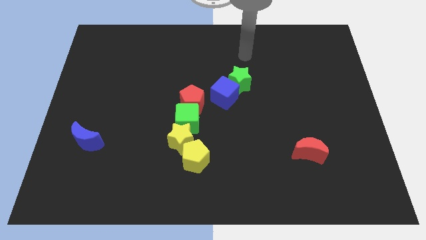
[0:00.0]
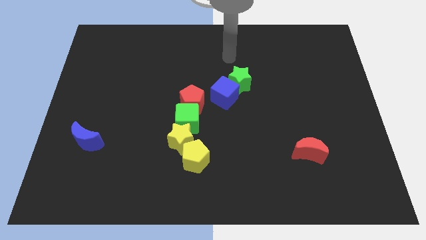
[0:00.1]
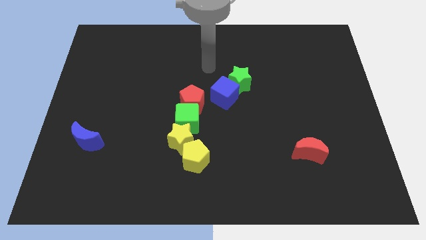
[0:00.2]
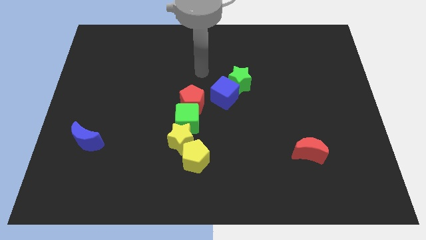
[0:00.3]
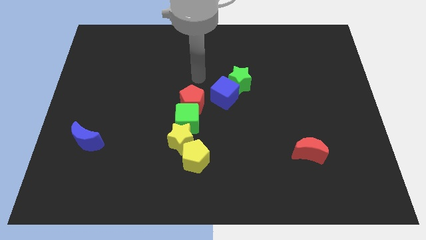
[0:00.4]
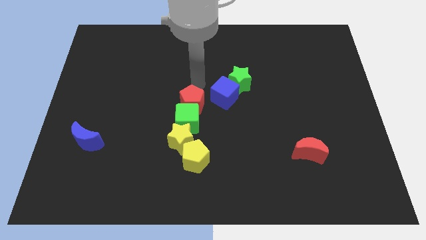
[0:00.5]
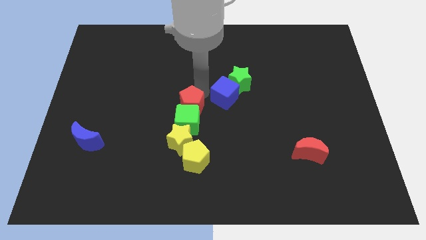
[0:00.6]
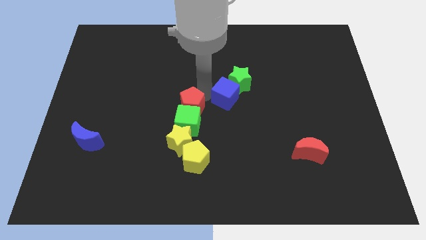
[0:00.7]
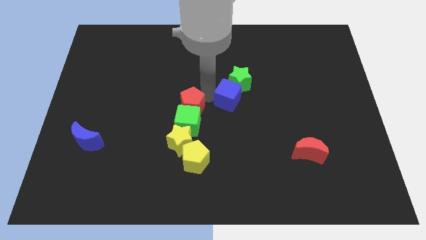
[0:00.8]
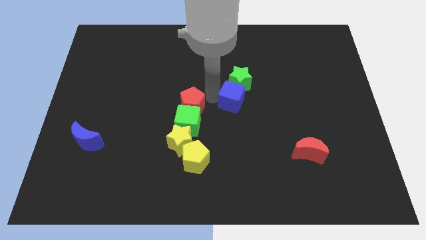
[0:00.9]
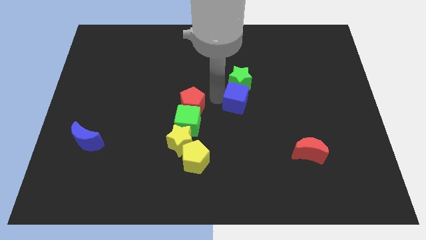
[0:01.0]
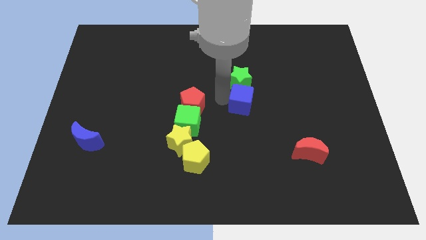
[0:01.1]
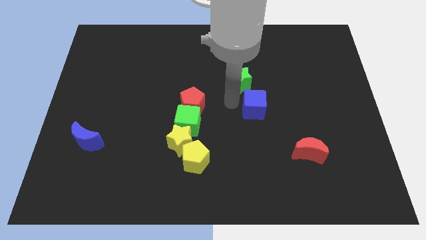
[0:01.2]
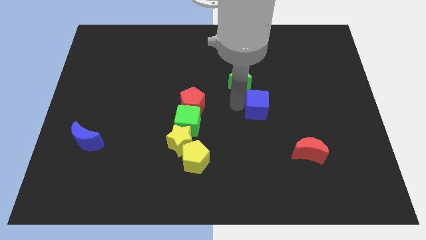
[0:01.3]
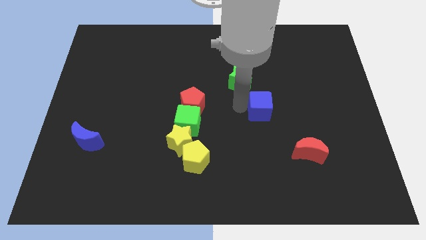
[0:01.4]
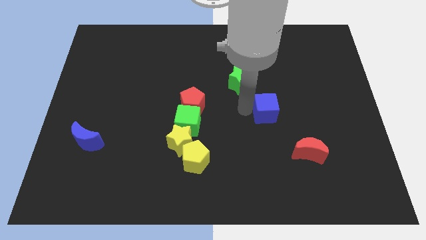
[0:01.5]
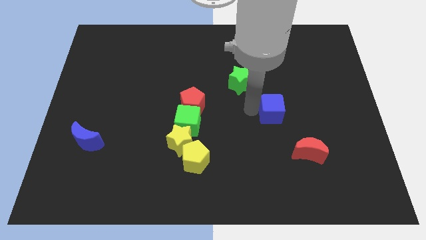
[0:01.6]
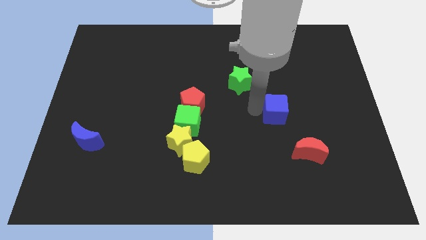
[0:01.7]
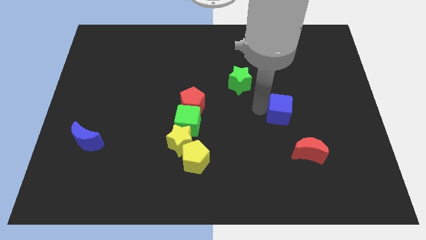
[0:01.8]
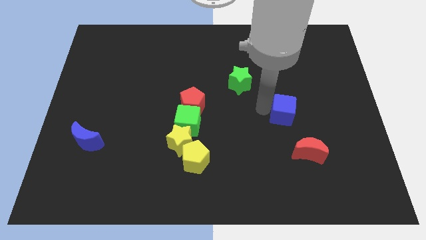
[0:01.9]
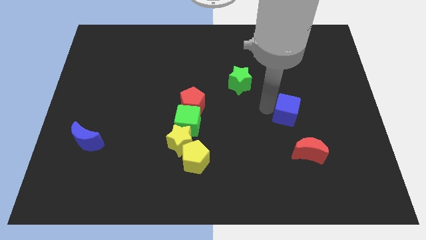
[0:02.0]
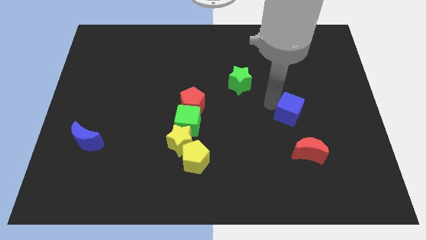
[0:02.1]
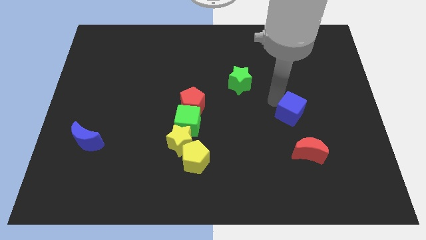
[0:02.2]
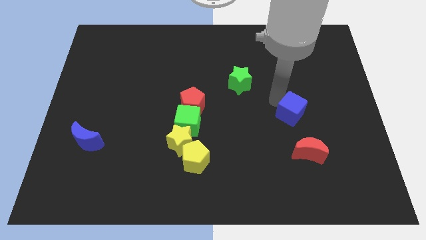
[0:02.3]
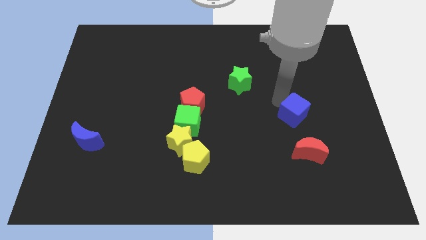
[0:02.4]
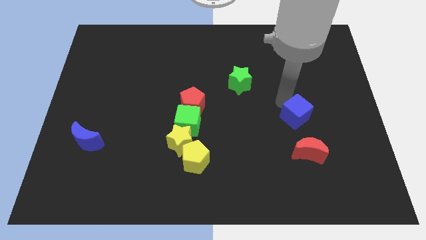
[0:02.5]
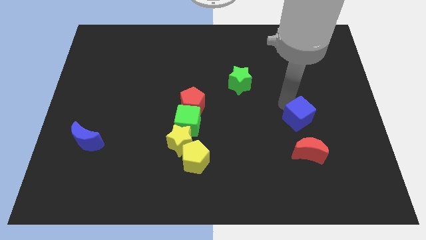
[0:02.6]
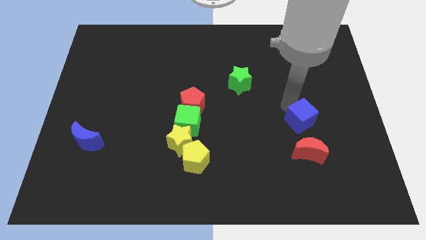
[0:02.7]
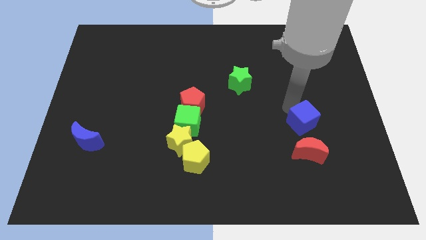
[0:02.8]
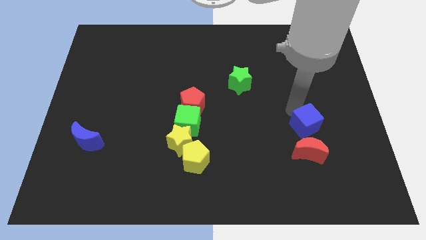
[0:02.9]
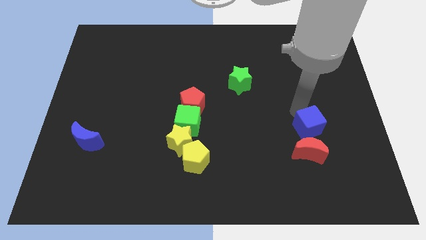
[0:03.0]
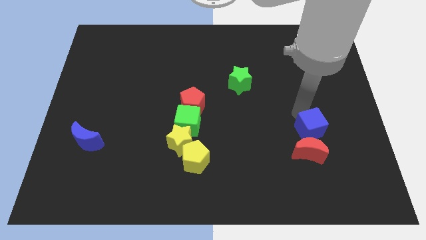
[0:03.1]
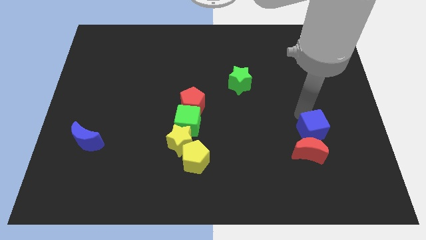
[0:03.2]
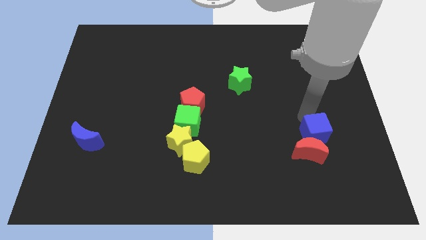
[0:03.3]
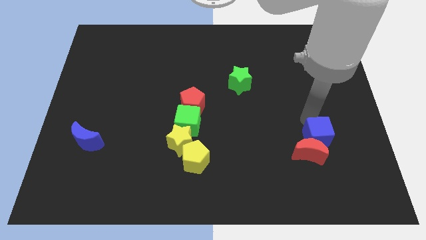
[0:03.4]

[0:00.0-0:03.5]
slide the blue cube next to the red moon

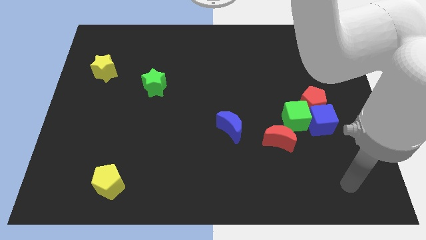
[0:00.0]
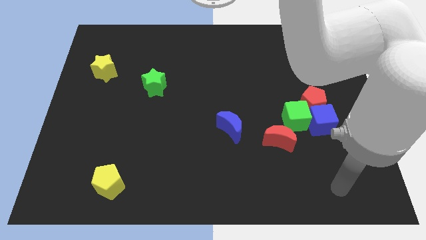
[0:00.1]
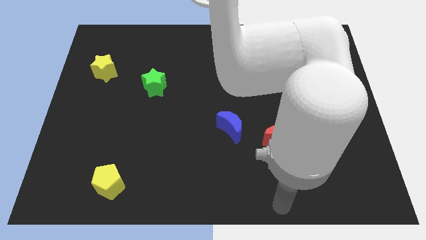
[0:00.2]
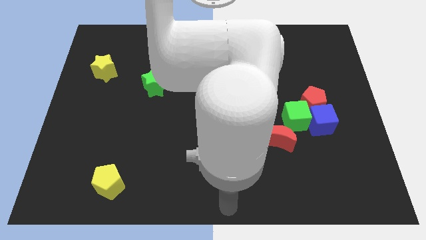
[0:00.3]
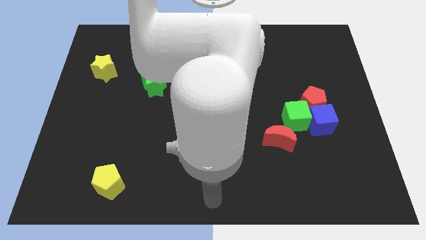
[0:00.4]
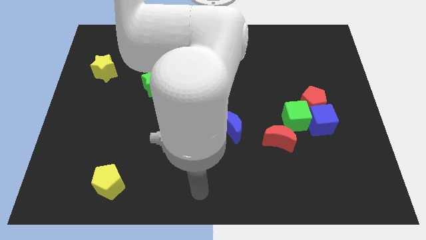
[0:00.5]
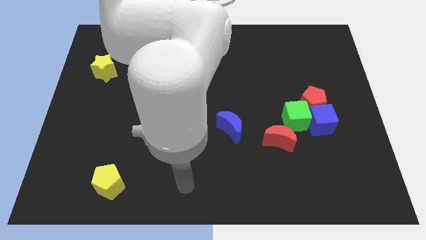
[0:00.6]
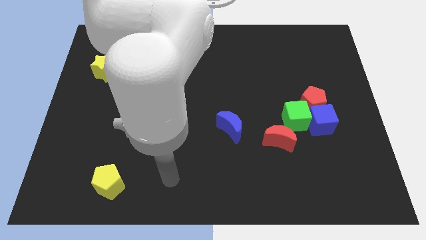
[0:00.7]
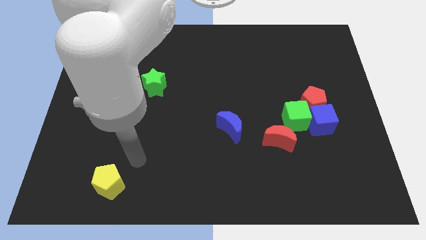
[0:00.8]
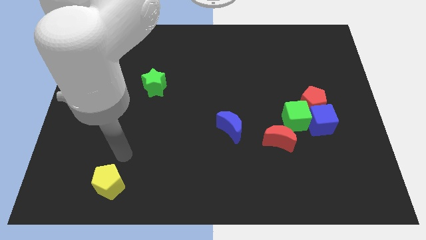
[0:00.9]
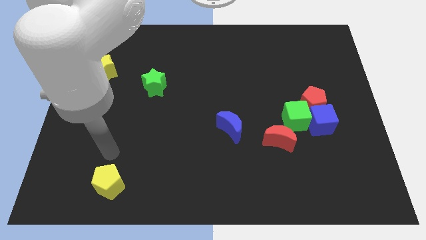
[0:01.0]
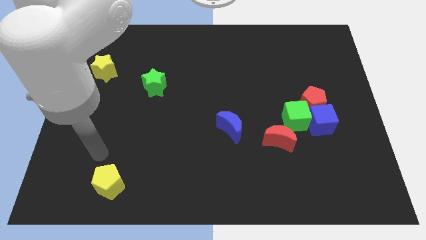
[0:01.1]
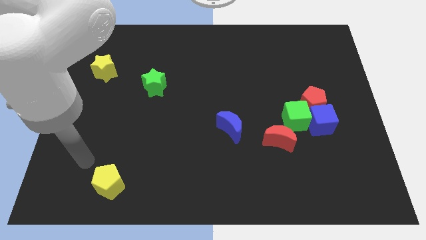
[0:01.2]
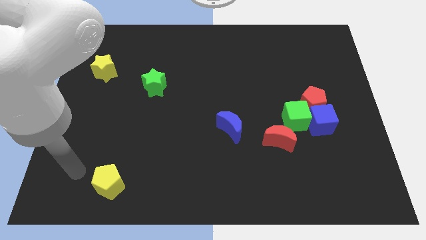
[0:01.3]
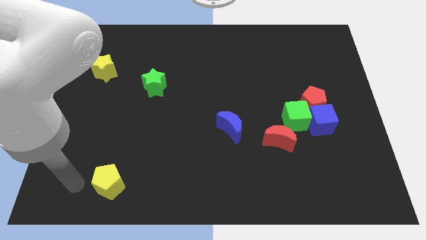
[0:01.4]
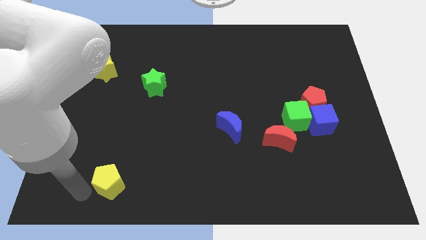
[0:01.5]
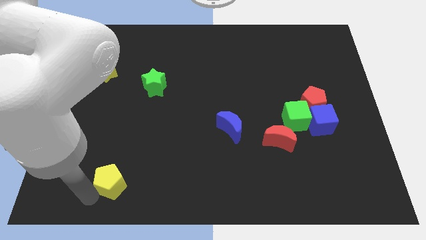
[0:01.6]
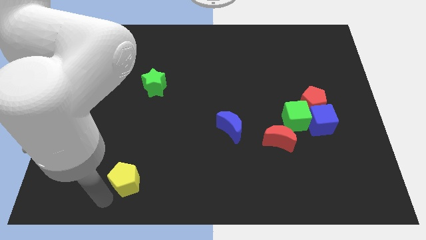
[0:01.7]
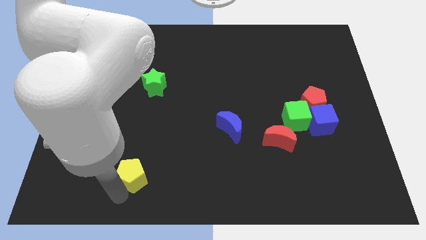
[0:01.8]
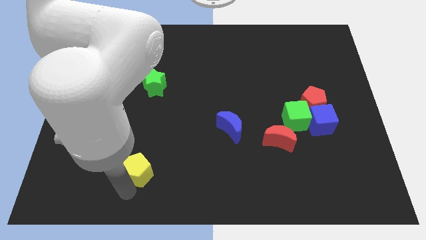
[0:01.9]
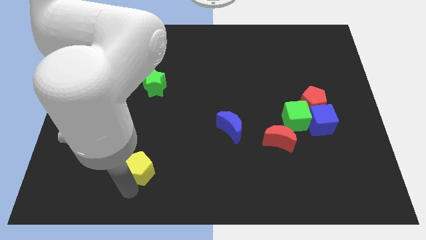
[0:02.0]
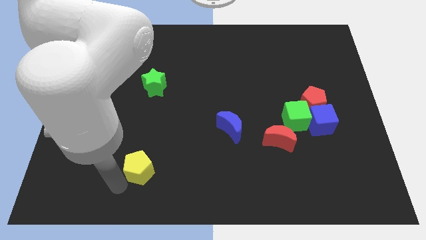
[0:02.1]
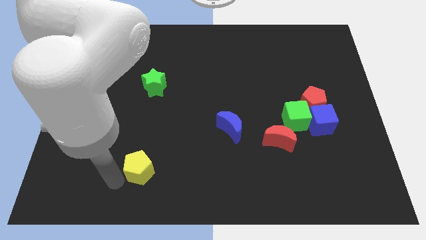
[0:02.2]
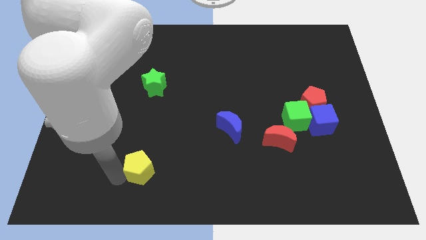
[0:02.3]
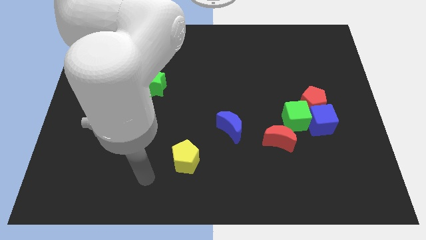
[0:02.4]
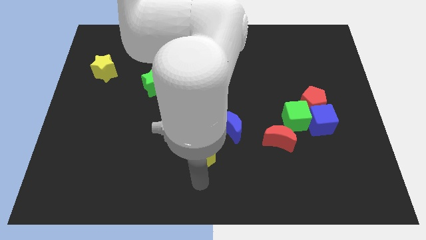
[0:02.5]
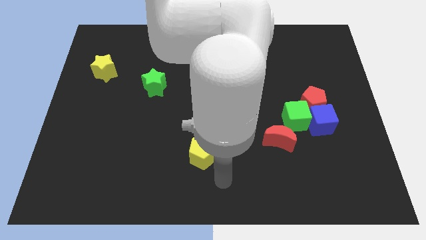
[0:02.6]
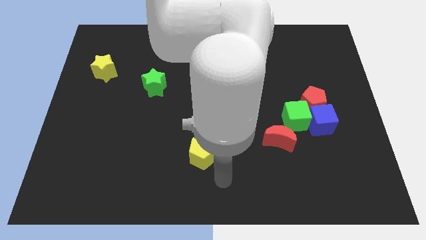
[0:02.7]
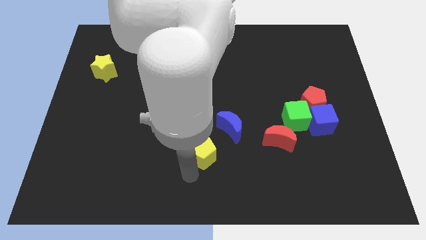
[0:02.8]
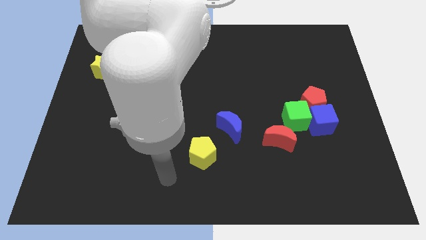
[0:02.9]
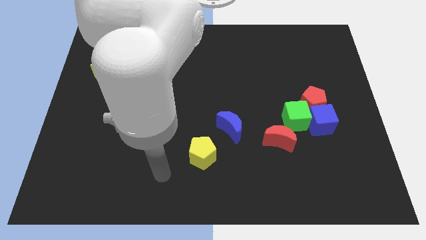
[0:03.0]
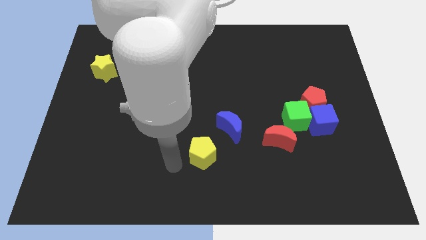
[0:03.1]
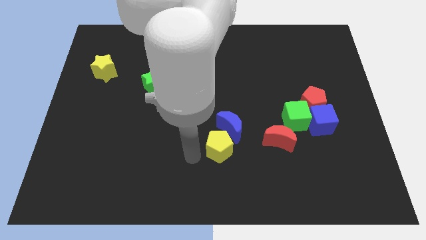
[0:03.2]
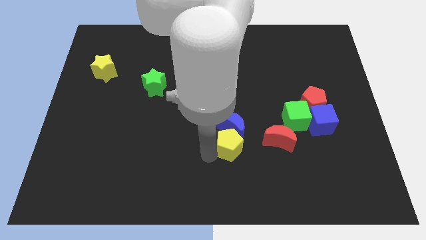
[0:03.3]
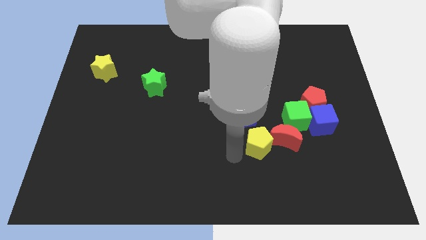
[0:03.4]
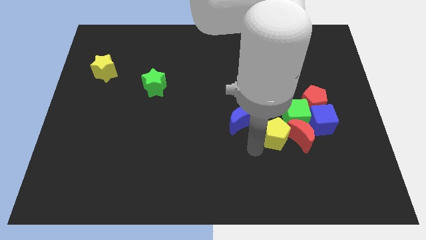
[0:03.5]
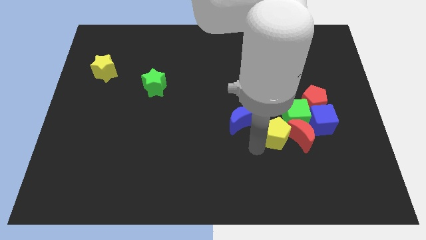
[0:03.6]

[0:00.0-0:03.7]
put the yellow pentagon to the red moon

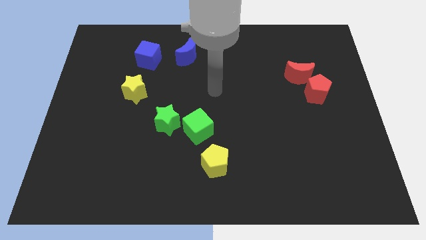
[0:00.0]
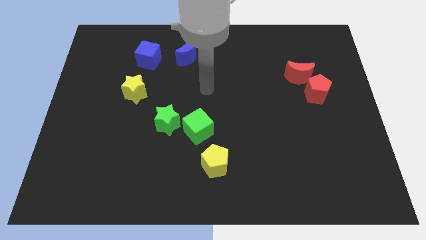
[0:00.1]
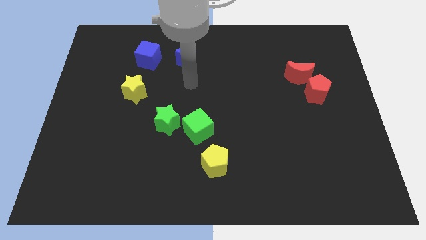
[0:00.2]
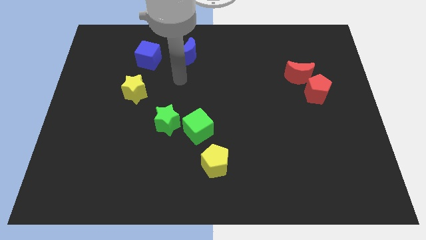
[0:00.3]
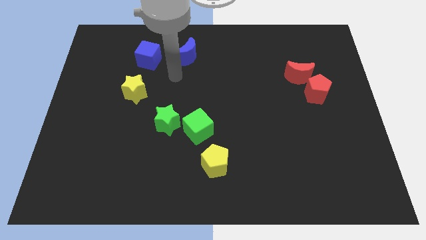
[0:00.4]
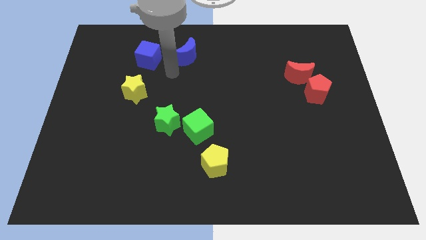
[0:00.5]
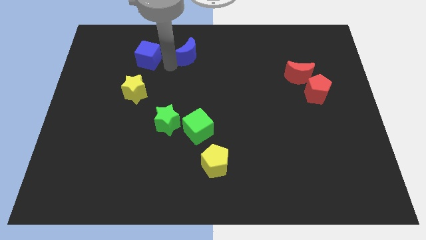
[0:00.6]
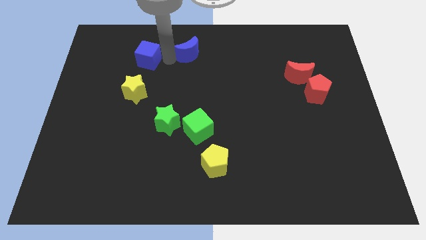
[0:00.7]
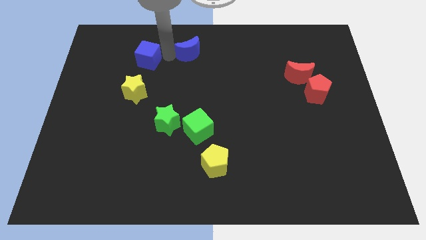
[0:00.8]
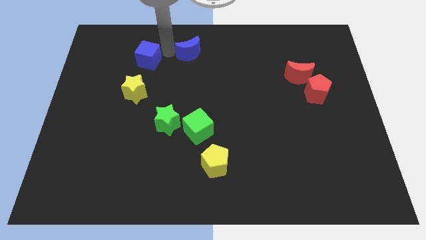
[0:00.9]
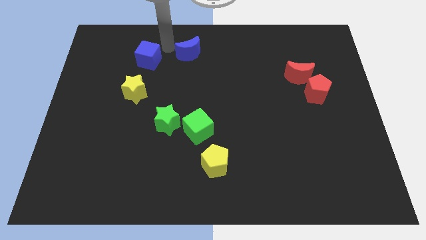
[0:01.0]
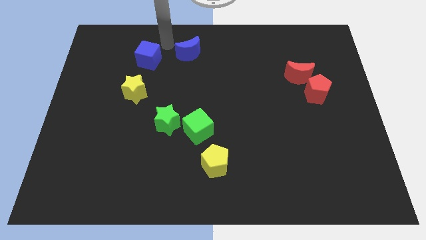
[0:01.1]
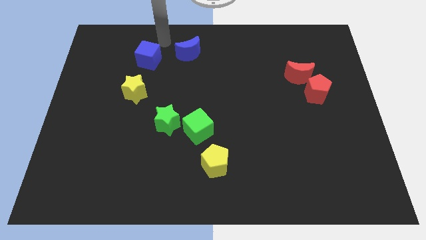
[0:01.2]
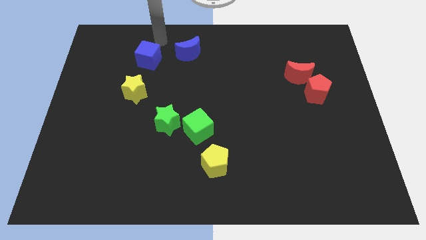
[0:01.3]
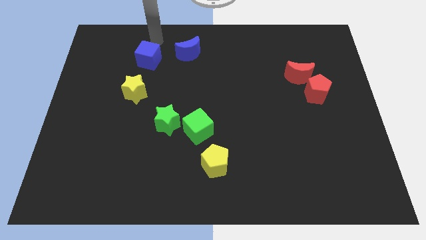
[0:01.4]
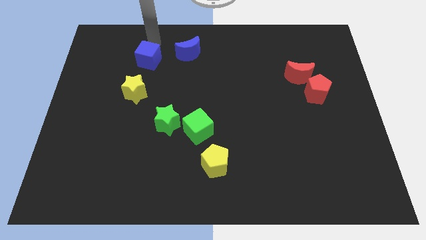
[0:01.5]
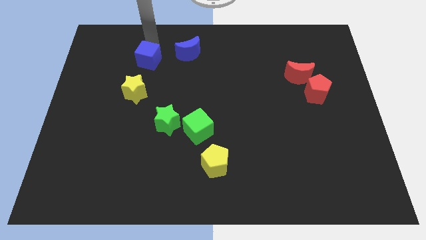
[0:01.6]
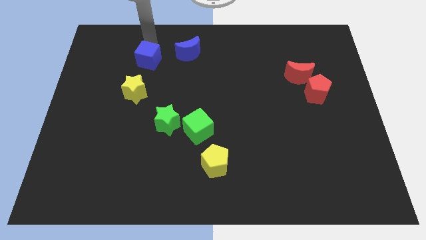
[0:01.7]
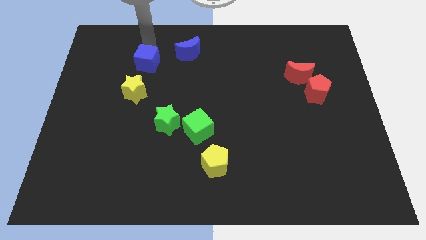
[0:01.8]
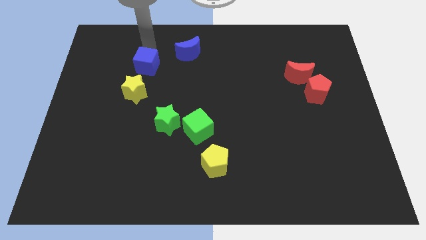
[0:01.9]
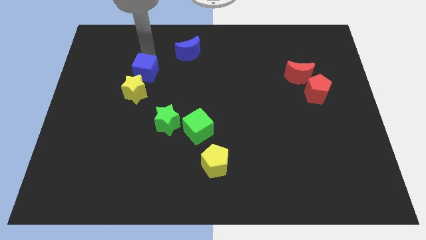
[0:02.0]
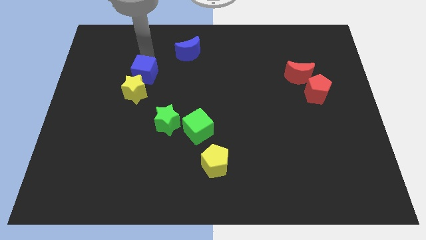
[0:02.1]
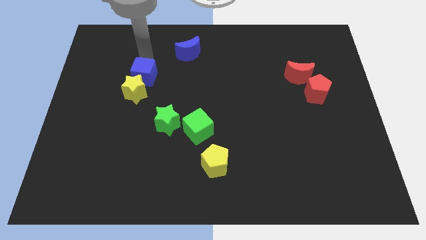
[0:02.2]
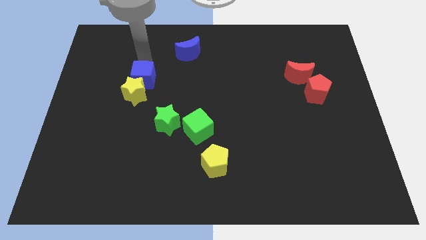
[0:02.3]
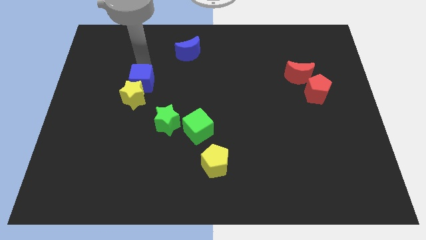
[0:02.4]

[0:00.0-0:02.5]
slide the blue cube towards the yellow star
